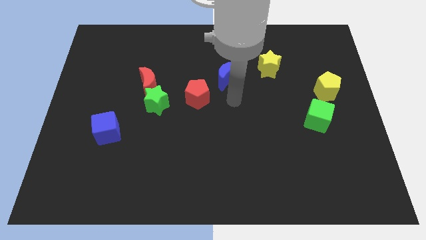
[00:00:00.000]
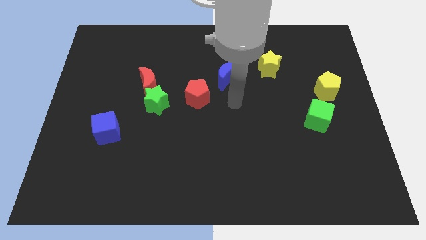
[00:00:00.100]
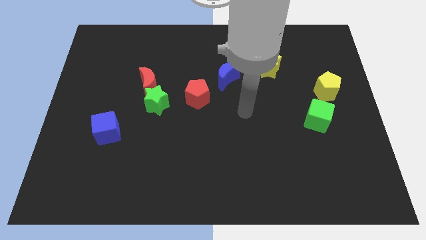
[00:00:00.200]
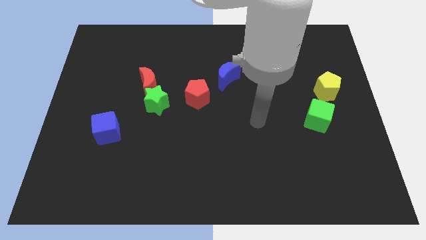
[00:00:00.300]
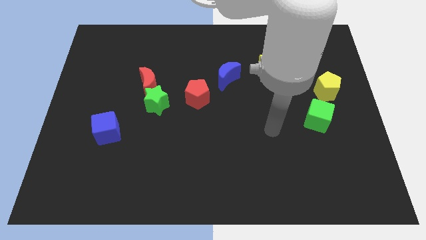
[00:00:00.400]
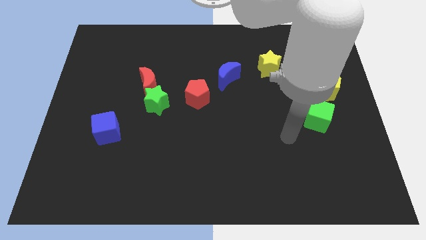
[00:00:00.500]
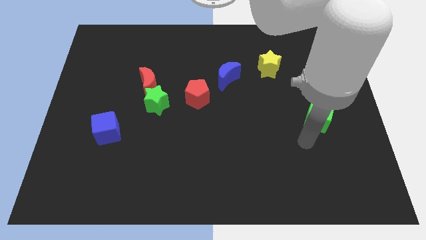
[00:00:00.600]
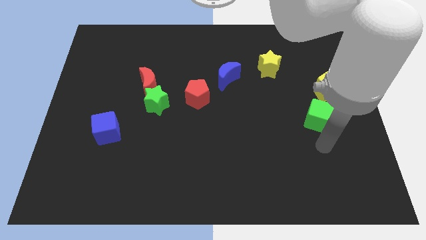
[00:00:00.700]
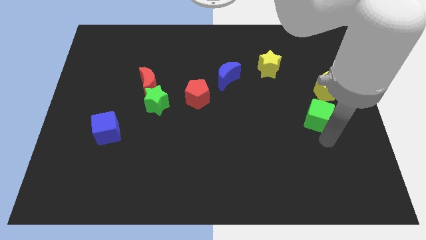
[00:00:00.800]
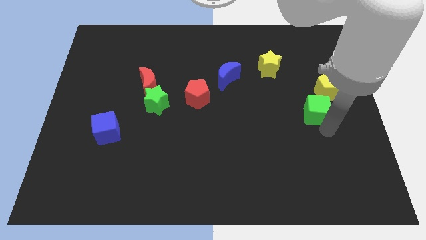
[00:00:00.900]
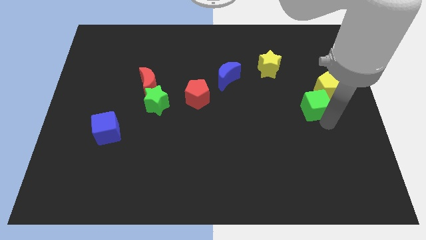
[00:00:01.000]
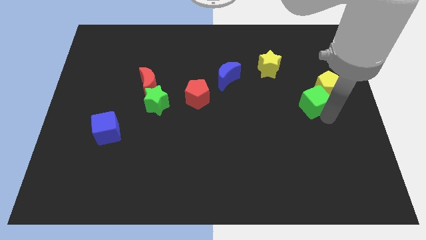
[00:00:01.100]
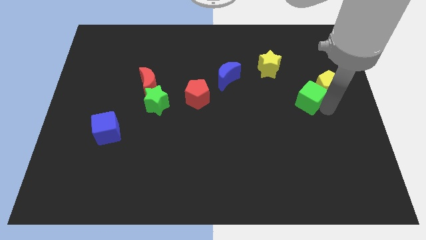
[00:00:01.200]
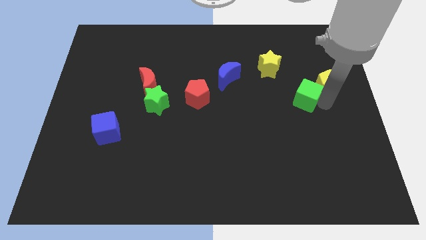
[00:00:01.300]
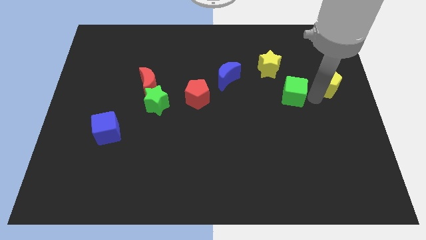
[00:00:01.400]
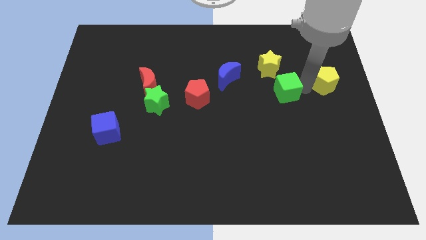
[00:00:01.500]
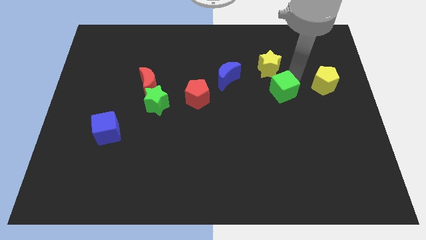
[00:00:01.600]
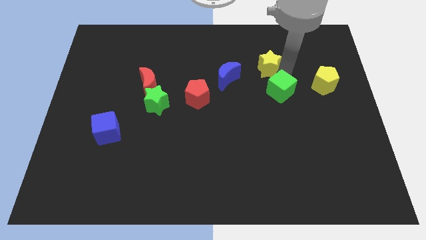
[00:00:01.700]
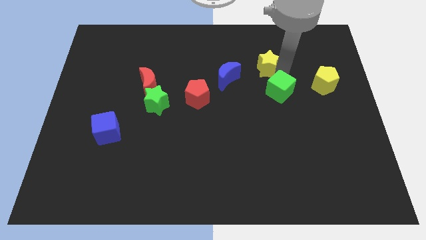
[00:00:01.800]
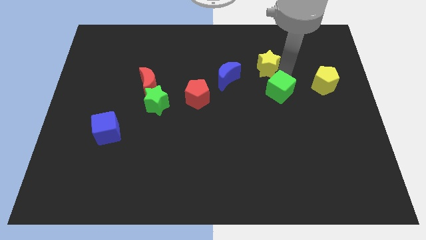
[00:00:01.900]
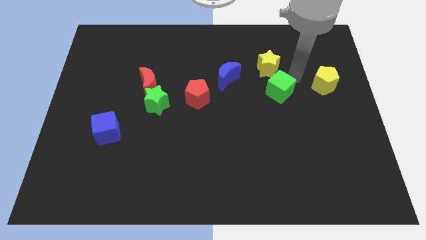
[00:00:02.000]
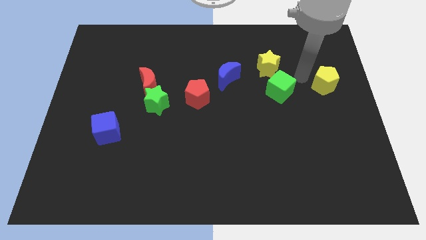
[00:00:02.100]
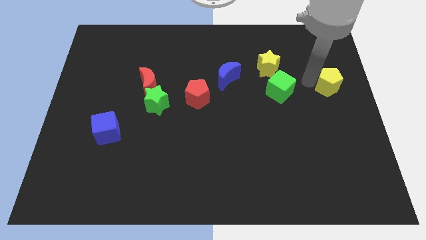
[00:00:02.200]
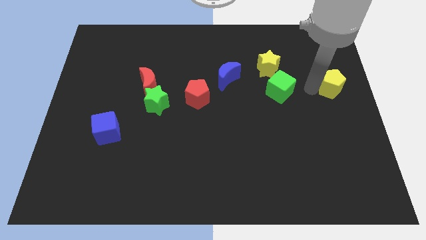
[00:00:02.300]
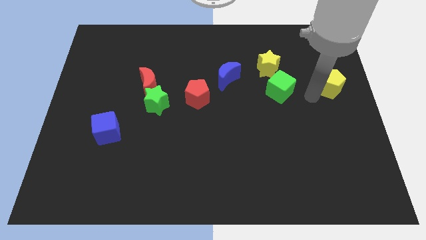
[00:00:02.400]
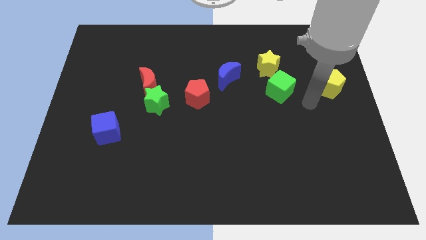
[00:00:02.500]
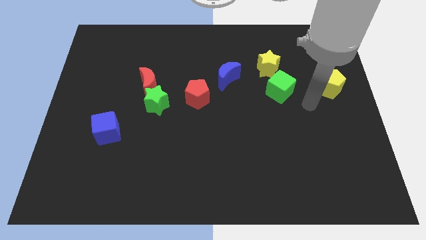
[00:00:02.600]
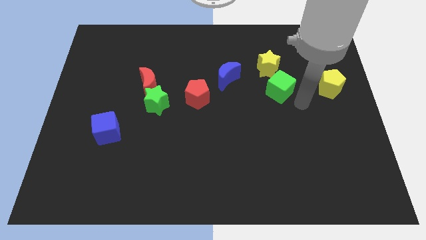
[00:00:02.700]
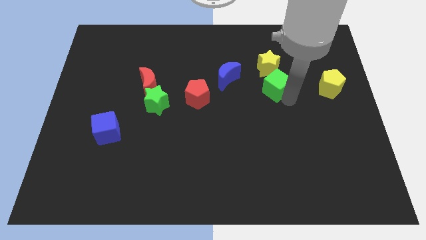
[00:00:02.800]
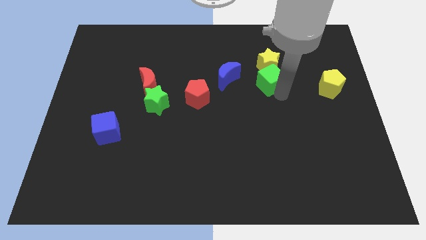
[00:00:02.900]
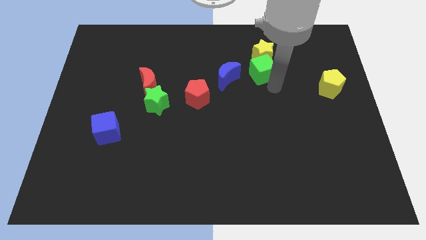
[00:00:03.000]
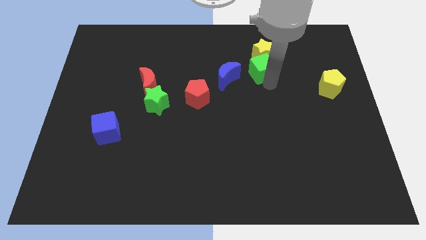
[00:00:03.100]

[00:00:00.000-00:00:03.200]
move the green cube away from the yellow pentagon

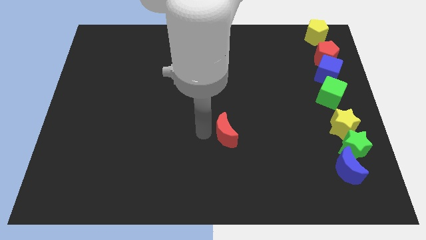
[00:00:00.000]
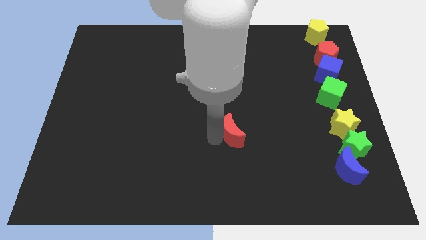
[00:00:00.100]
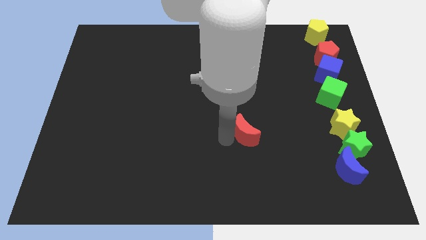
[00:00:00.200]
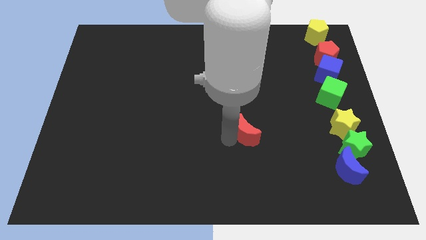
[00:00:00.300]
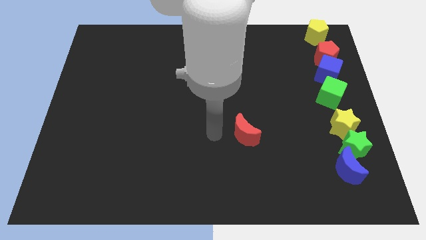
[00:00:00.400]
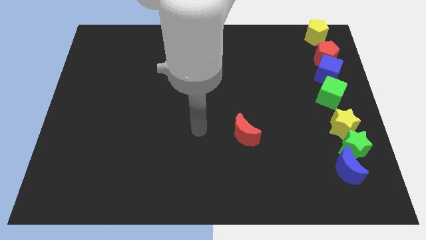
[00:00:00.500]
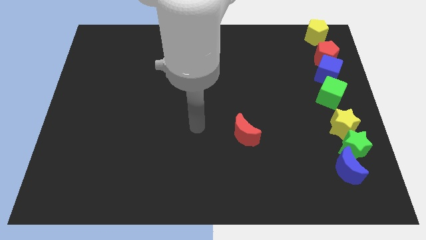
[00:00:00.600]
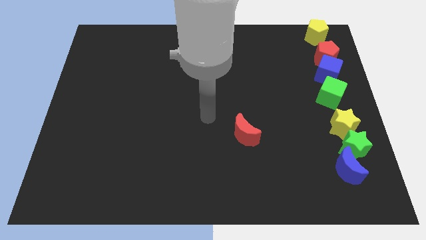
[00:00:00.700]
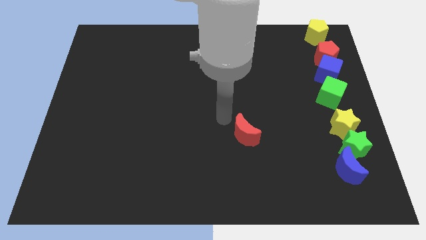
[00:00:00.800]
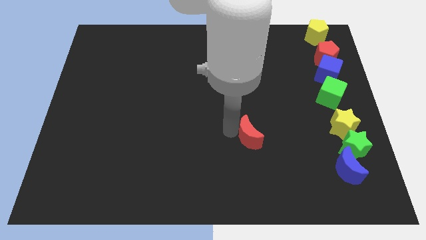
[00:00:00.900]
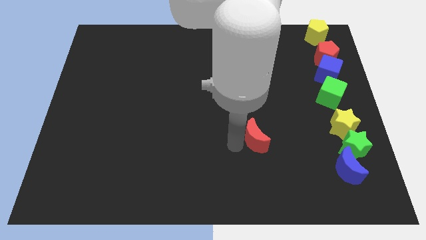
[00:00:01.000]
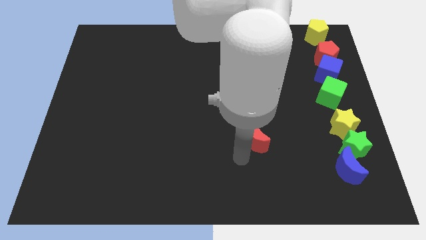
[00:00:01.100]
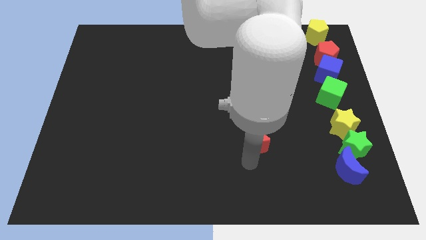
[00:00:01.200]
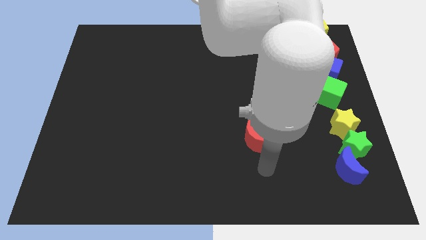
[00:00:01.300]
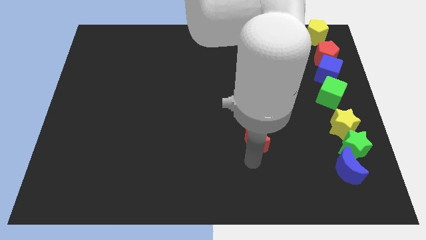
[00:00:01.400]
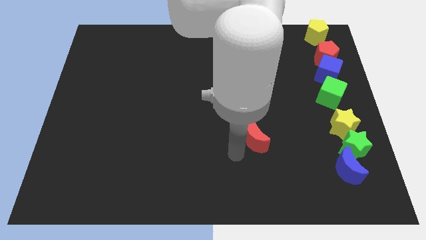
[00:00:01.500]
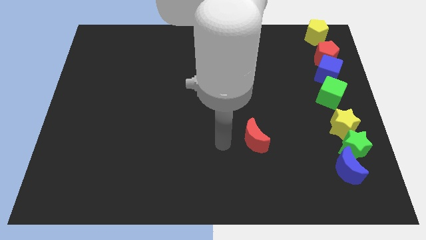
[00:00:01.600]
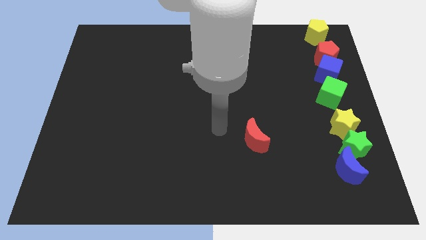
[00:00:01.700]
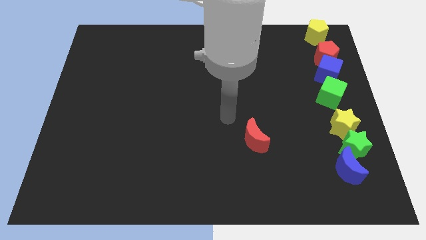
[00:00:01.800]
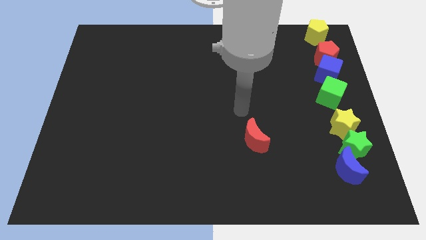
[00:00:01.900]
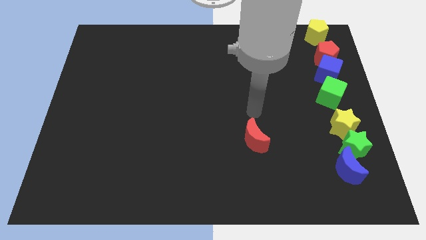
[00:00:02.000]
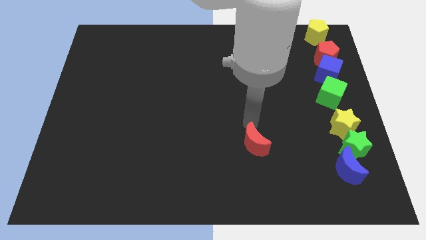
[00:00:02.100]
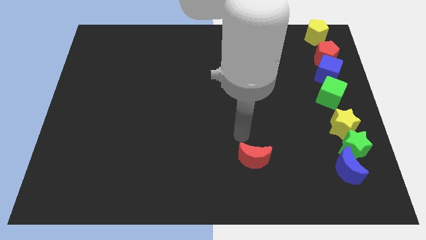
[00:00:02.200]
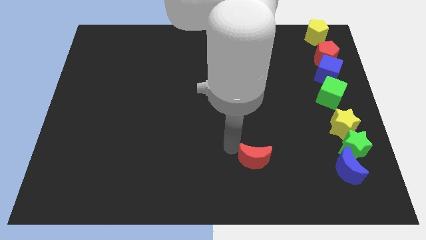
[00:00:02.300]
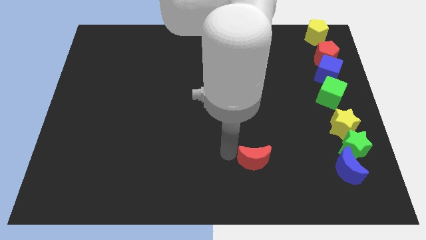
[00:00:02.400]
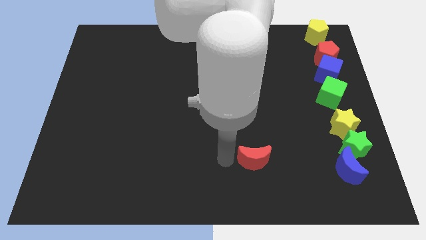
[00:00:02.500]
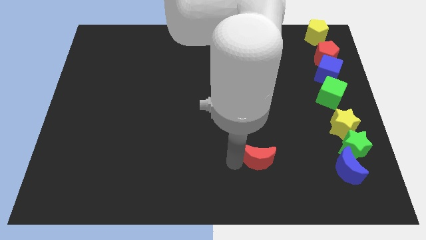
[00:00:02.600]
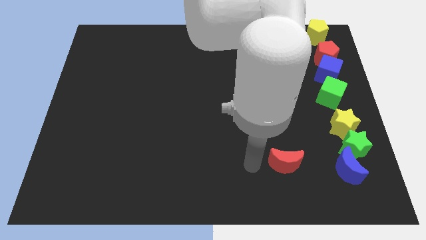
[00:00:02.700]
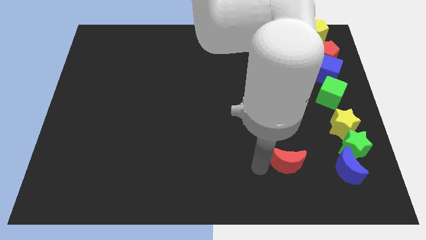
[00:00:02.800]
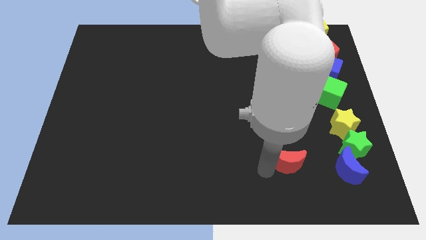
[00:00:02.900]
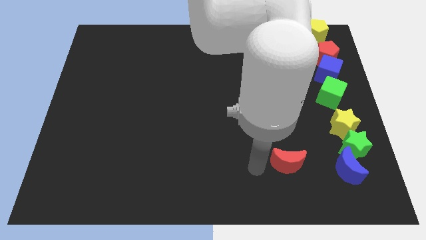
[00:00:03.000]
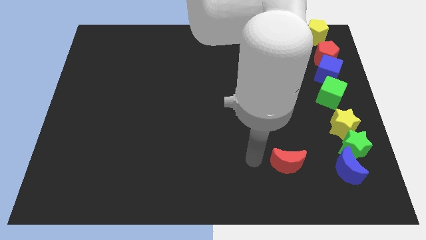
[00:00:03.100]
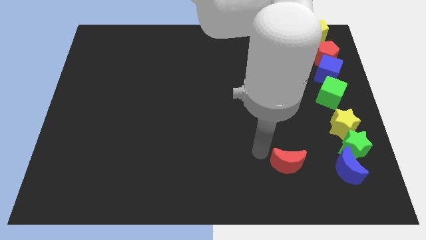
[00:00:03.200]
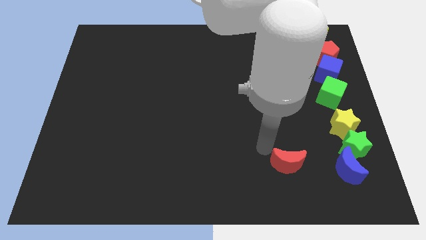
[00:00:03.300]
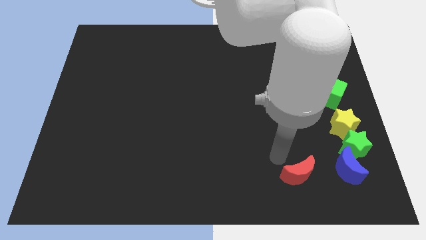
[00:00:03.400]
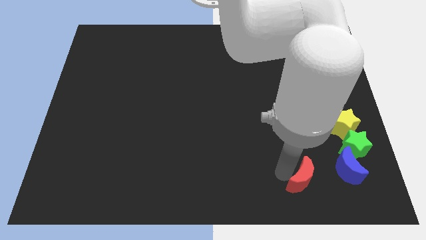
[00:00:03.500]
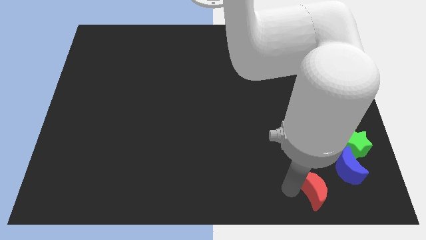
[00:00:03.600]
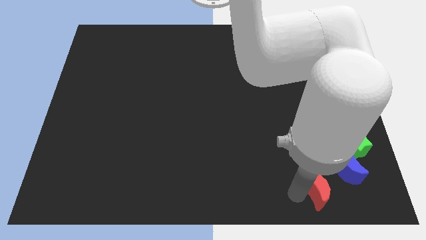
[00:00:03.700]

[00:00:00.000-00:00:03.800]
place the red moon to the bottom right side

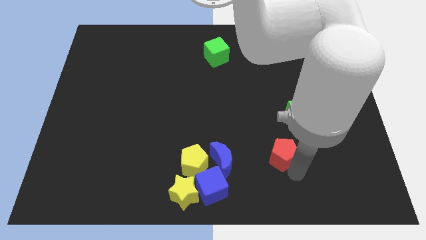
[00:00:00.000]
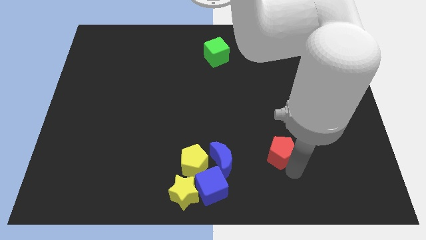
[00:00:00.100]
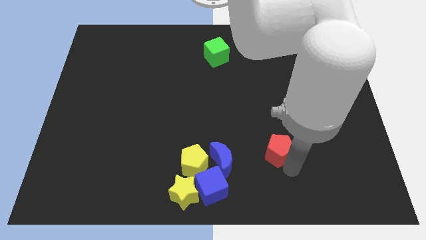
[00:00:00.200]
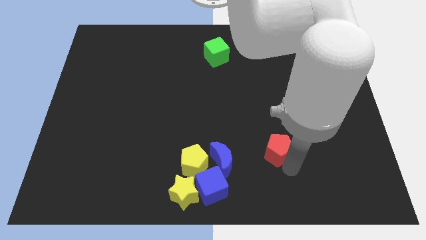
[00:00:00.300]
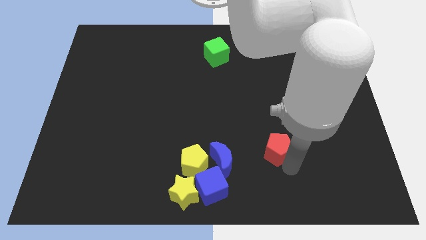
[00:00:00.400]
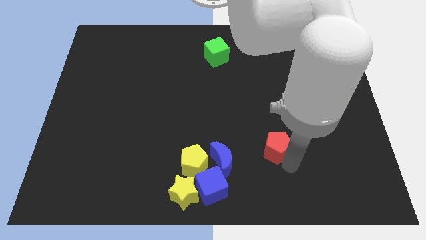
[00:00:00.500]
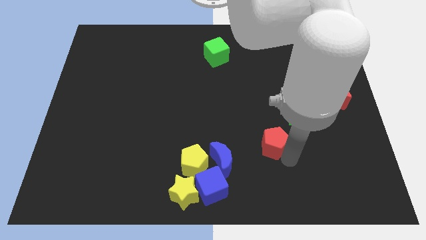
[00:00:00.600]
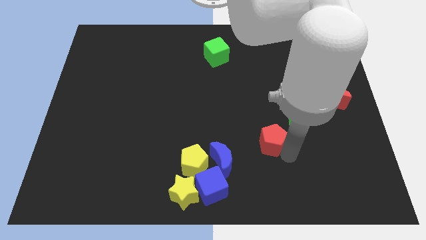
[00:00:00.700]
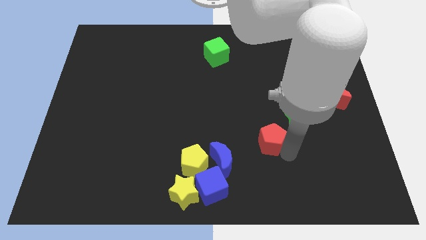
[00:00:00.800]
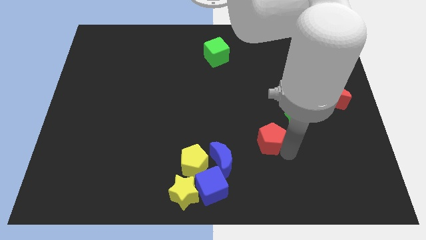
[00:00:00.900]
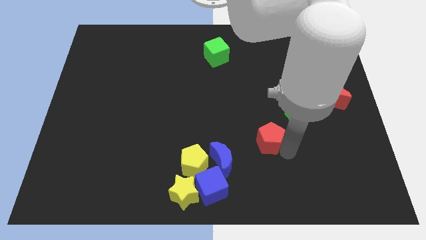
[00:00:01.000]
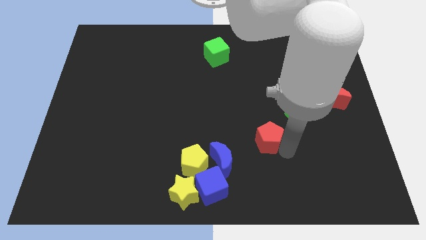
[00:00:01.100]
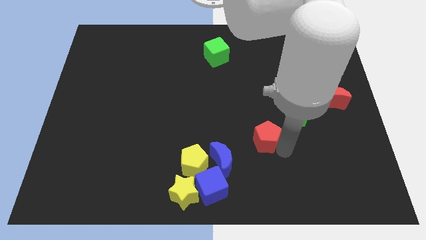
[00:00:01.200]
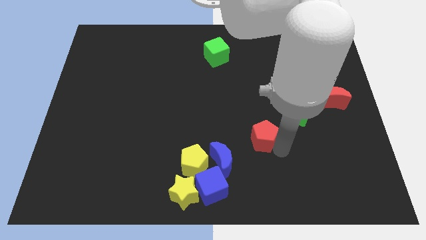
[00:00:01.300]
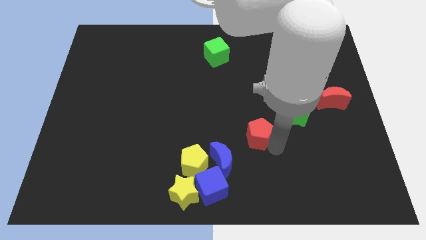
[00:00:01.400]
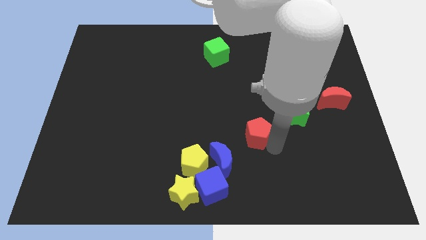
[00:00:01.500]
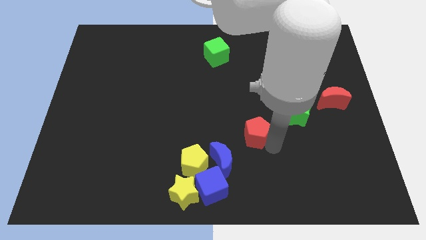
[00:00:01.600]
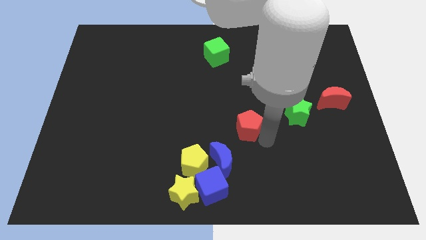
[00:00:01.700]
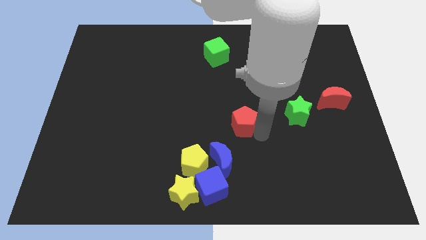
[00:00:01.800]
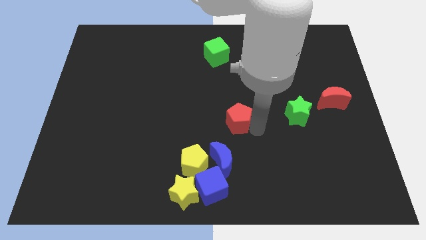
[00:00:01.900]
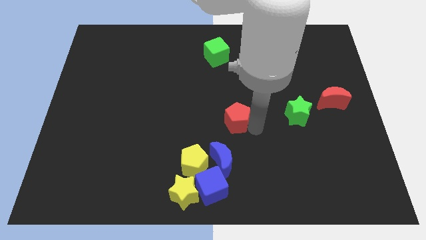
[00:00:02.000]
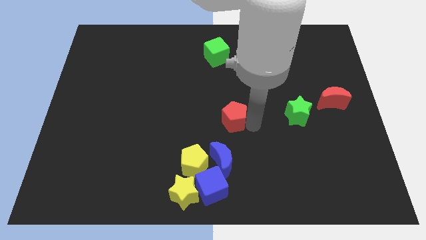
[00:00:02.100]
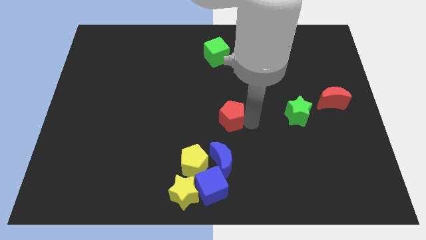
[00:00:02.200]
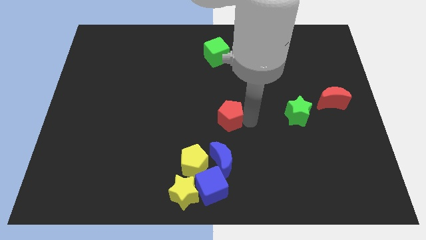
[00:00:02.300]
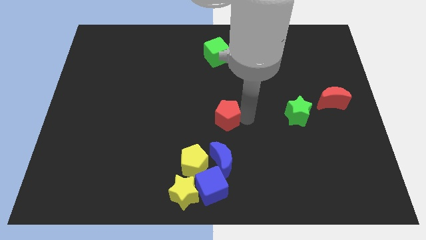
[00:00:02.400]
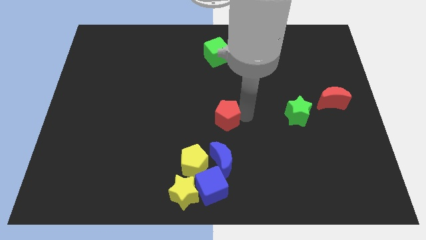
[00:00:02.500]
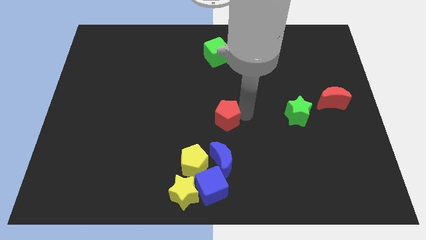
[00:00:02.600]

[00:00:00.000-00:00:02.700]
push the red pentagon to the center of the board
